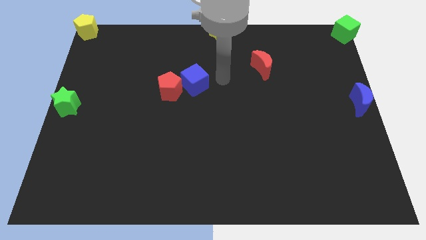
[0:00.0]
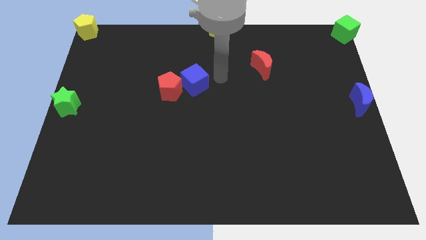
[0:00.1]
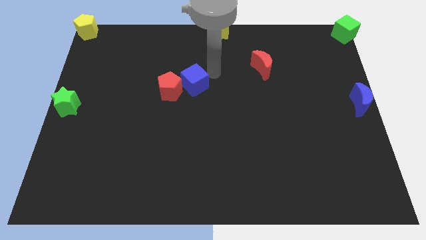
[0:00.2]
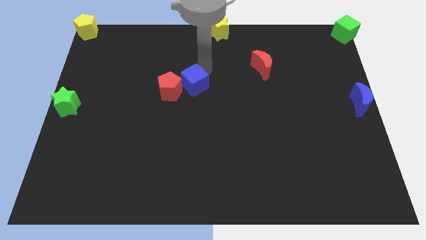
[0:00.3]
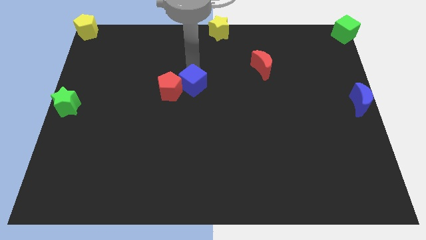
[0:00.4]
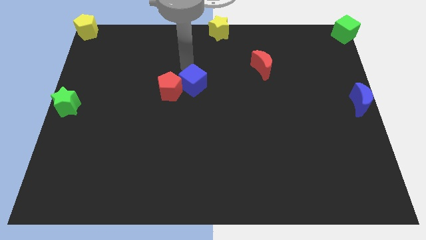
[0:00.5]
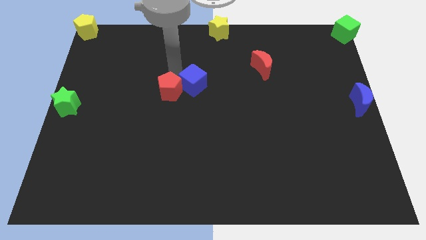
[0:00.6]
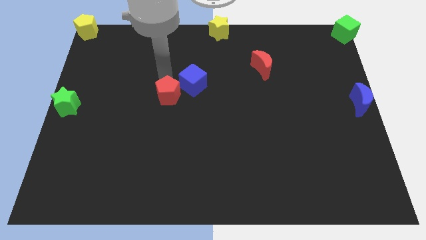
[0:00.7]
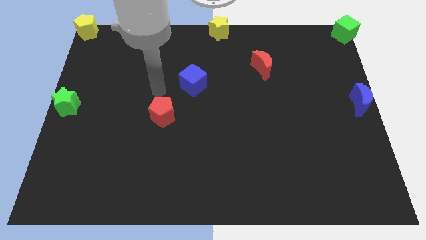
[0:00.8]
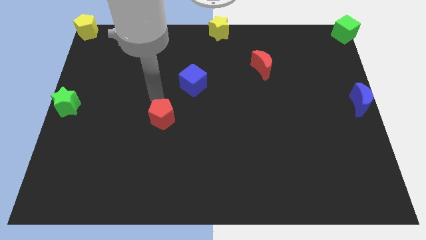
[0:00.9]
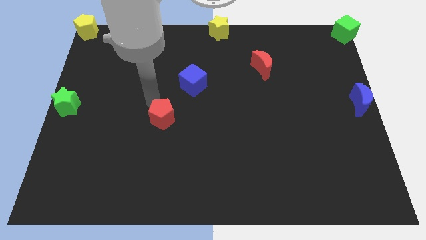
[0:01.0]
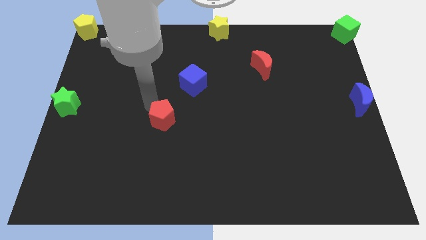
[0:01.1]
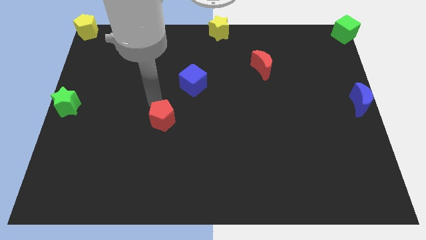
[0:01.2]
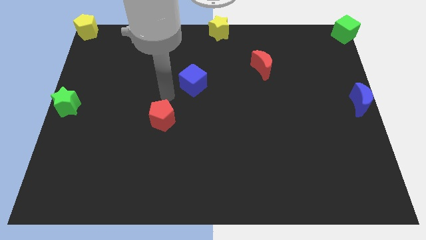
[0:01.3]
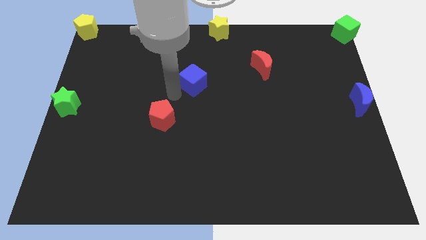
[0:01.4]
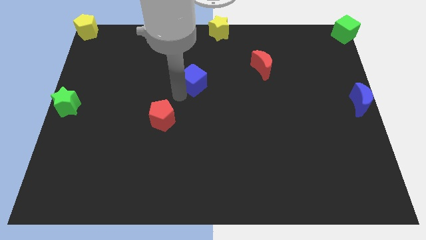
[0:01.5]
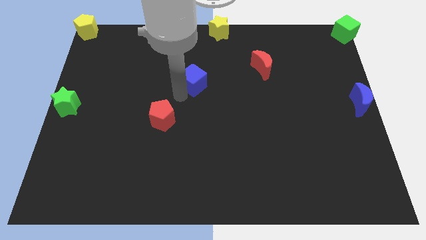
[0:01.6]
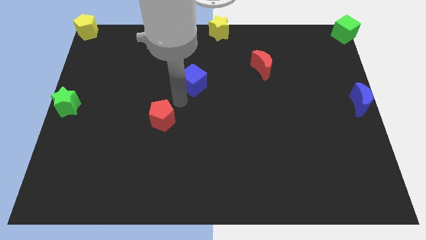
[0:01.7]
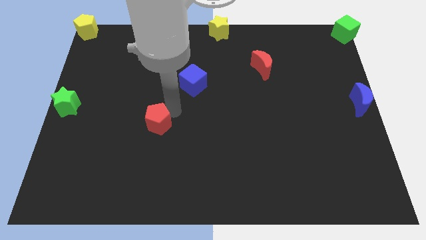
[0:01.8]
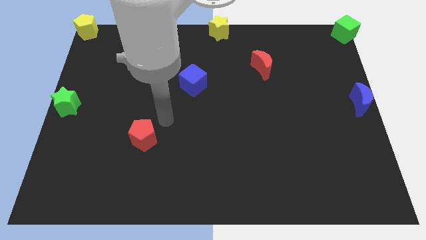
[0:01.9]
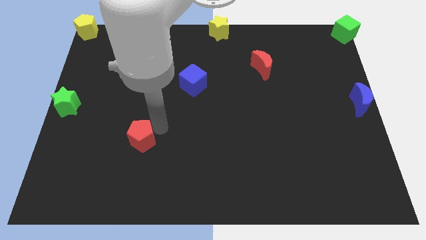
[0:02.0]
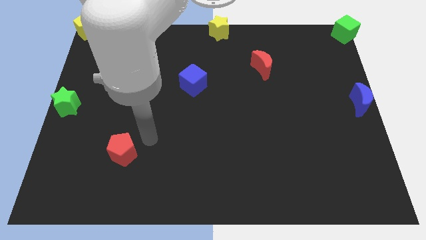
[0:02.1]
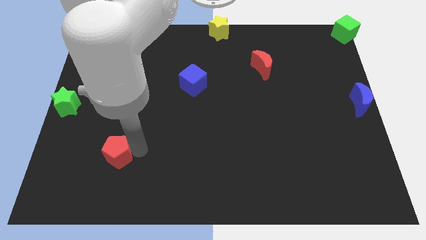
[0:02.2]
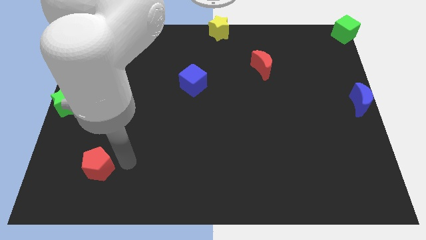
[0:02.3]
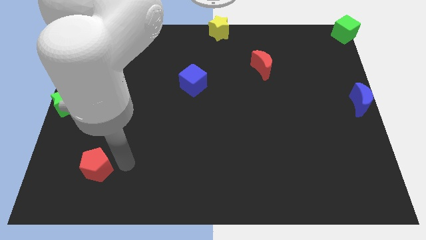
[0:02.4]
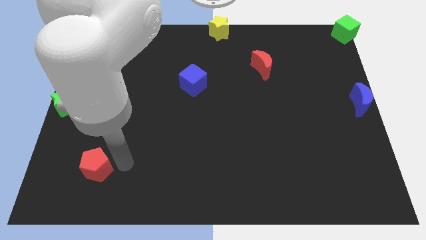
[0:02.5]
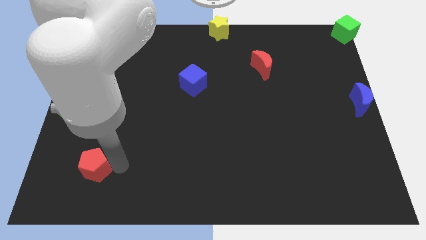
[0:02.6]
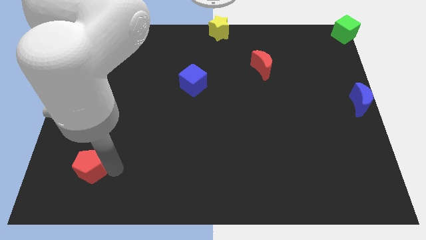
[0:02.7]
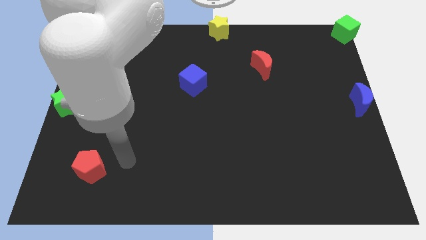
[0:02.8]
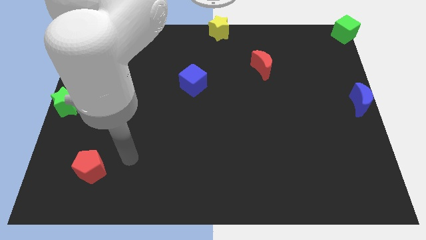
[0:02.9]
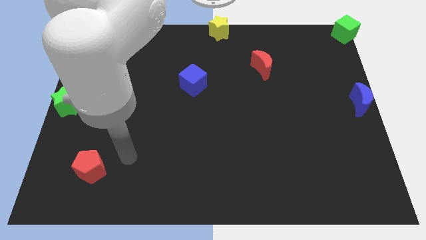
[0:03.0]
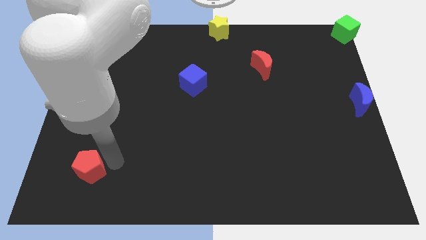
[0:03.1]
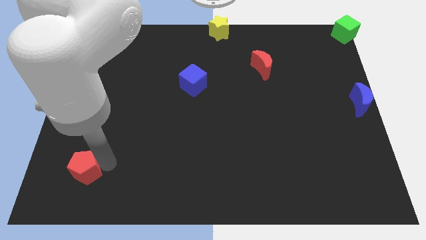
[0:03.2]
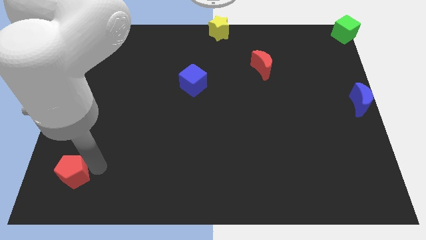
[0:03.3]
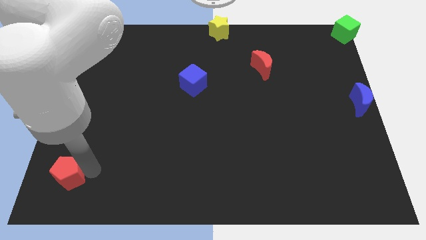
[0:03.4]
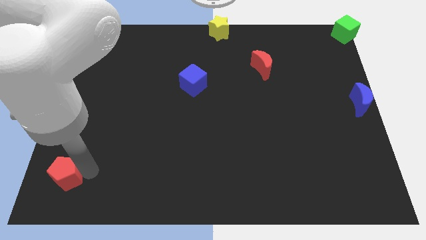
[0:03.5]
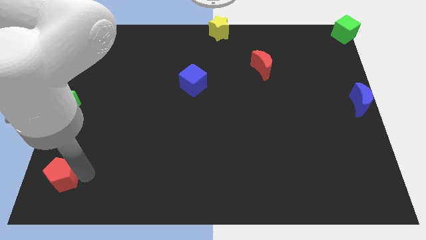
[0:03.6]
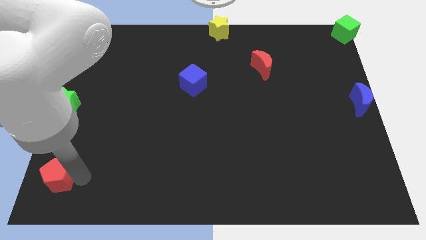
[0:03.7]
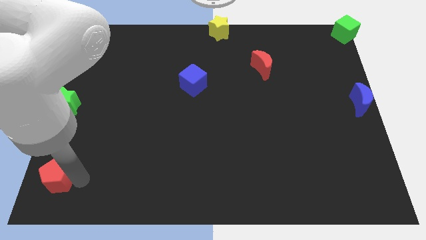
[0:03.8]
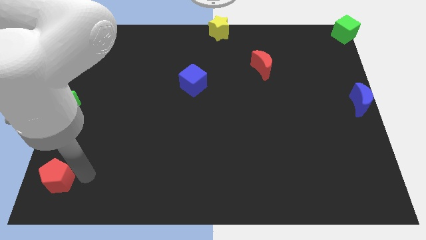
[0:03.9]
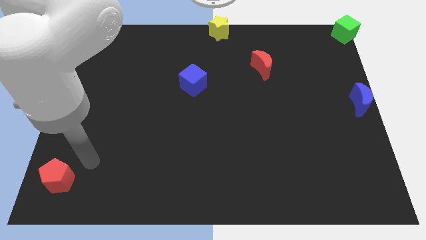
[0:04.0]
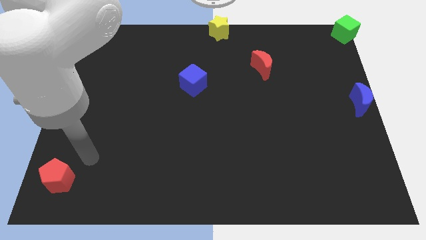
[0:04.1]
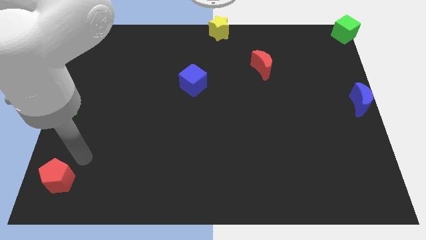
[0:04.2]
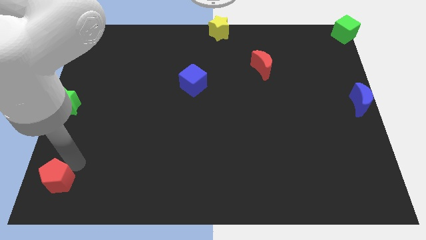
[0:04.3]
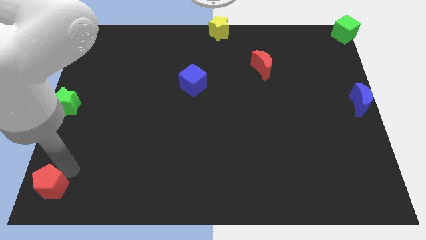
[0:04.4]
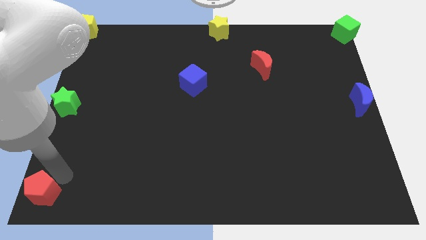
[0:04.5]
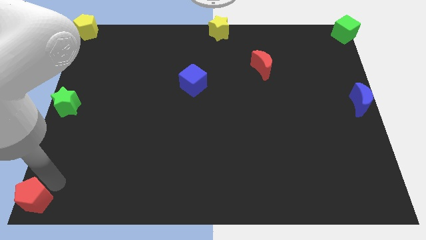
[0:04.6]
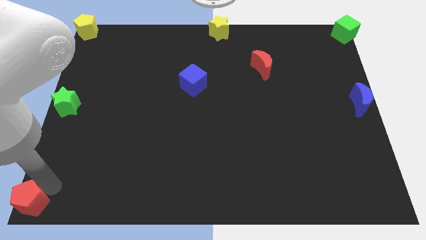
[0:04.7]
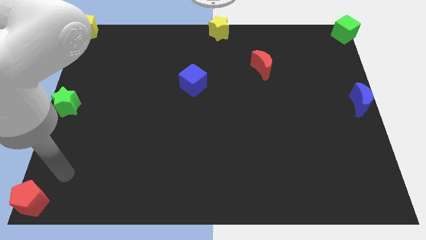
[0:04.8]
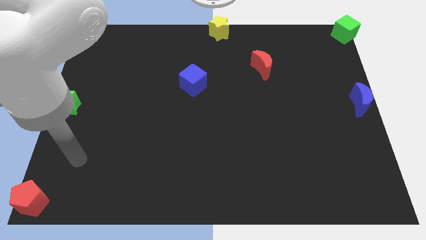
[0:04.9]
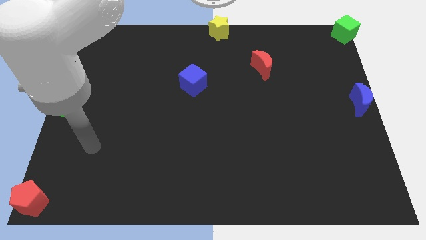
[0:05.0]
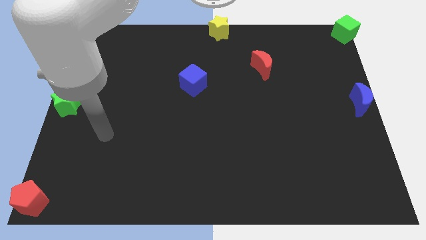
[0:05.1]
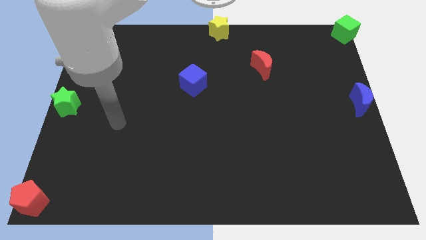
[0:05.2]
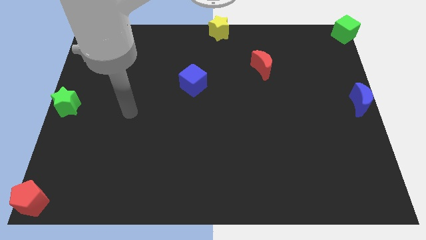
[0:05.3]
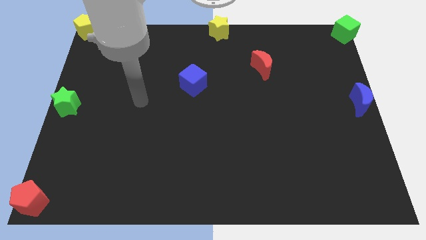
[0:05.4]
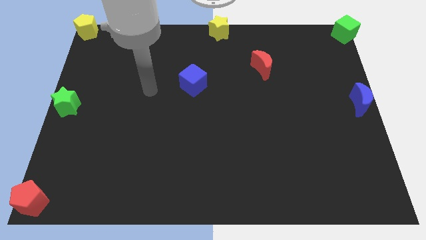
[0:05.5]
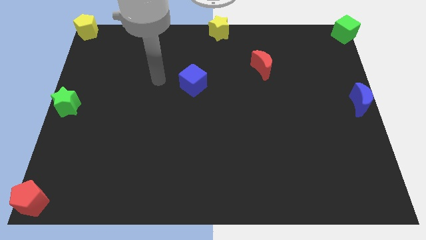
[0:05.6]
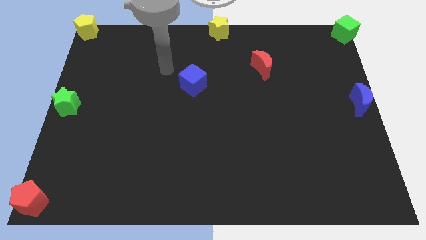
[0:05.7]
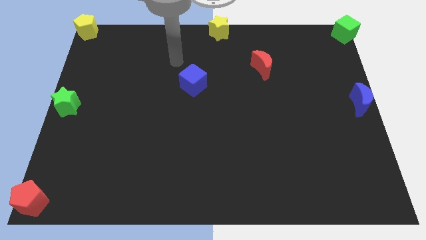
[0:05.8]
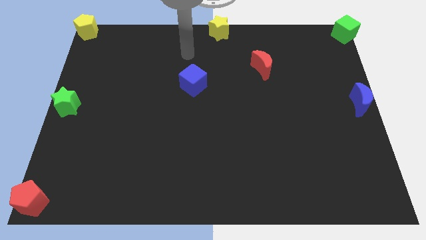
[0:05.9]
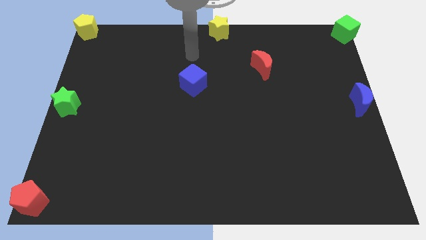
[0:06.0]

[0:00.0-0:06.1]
place the red pentagon at the bottom left corner of the board

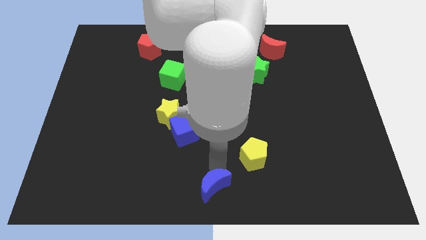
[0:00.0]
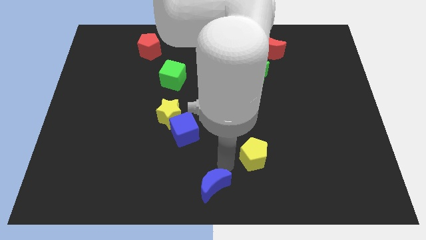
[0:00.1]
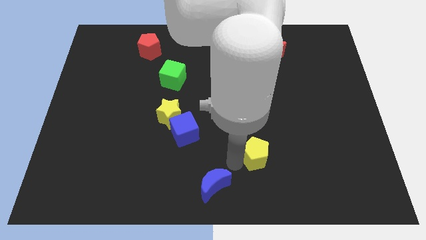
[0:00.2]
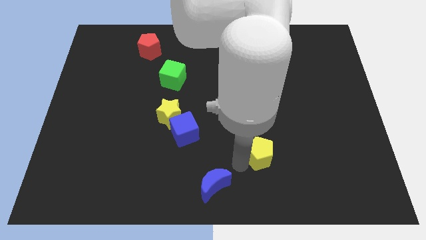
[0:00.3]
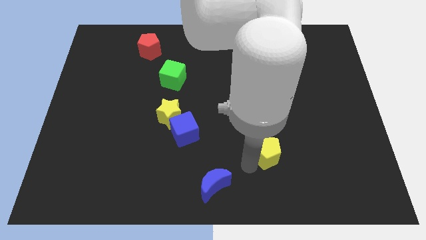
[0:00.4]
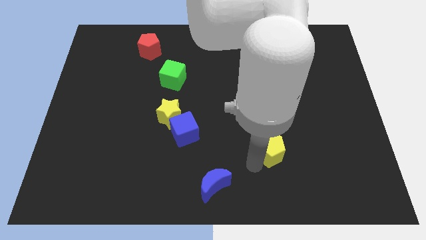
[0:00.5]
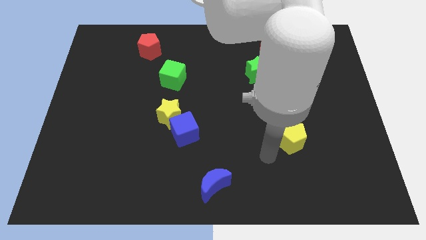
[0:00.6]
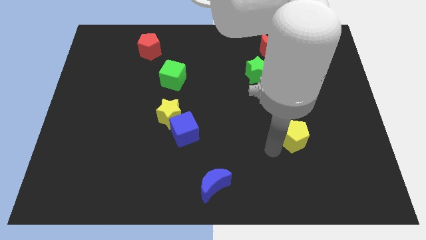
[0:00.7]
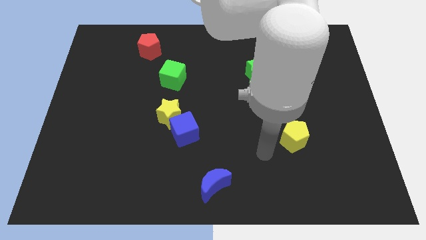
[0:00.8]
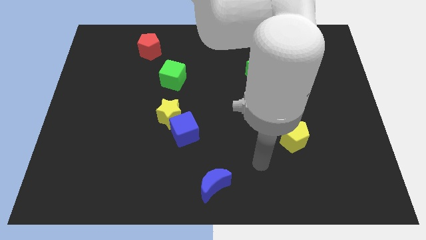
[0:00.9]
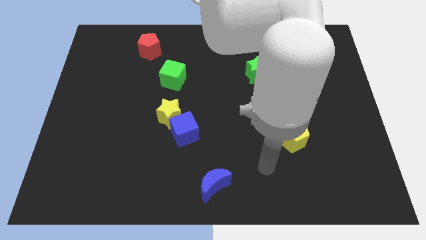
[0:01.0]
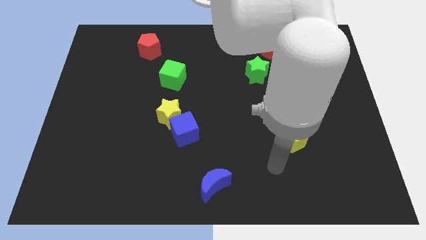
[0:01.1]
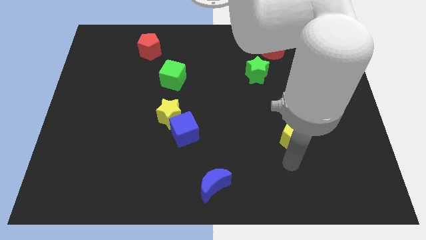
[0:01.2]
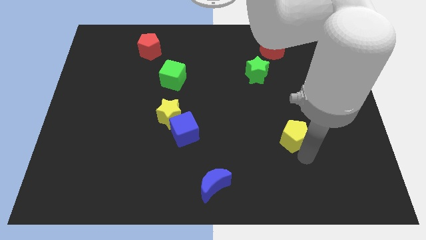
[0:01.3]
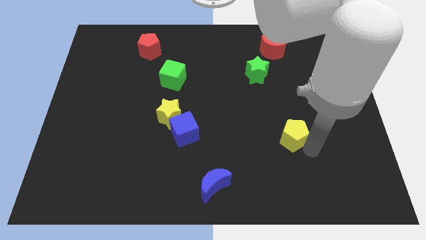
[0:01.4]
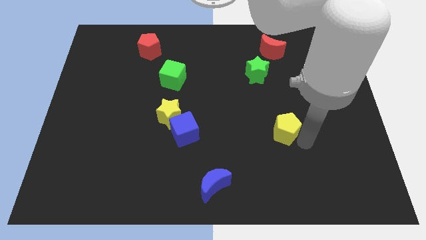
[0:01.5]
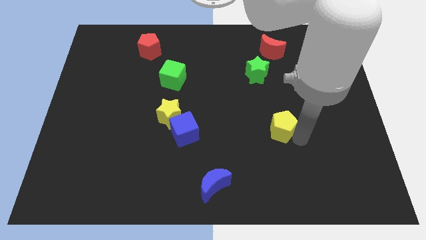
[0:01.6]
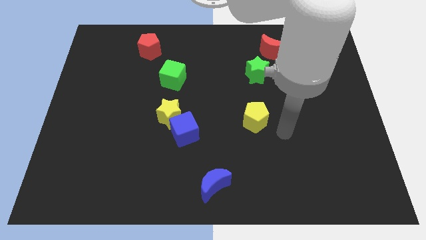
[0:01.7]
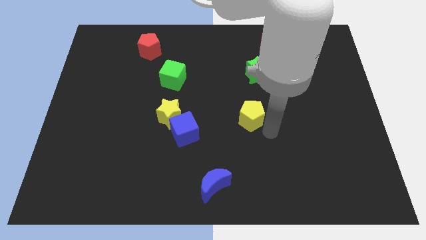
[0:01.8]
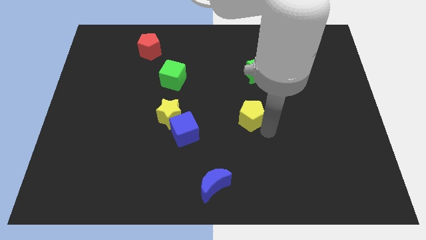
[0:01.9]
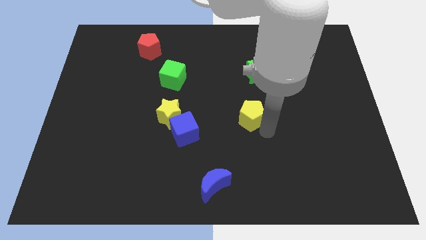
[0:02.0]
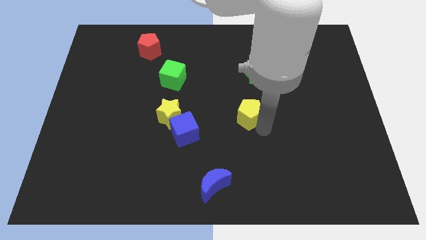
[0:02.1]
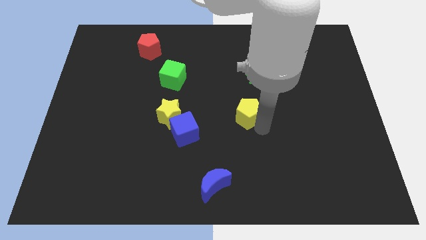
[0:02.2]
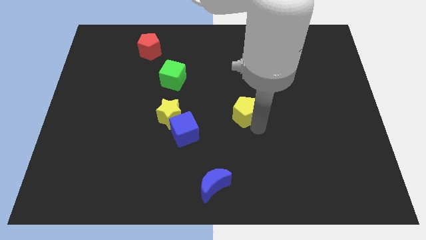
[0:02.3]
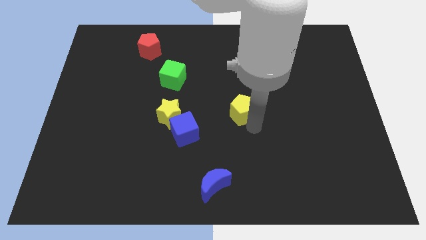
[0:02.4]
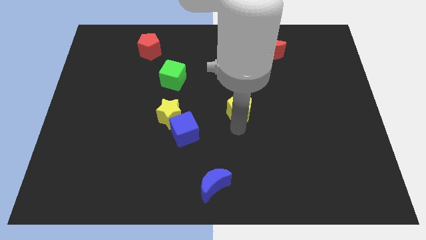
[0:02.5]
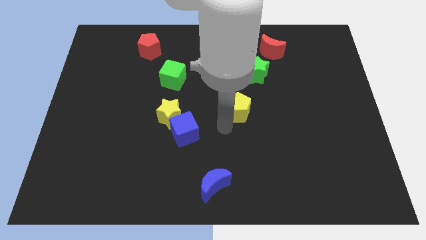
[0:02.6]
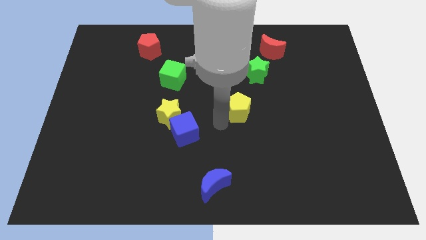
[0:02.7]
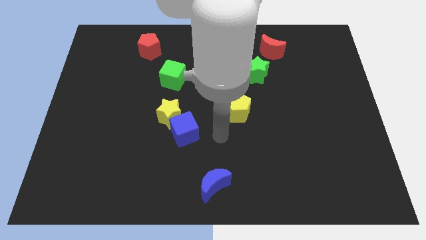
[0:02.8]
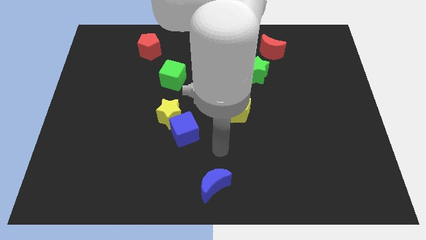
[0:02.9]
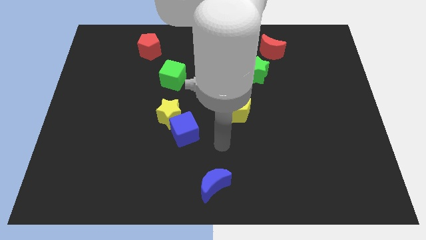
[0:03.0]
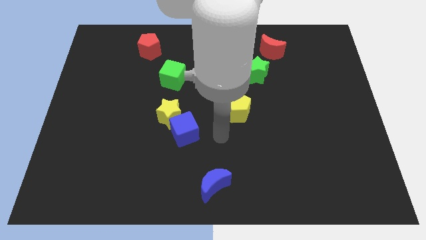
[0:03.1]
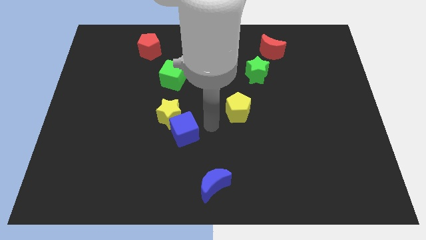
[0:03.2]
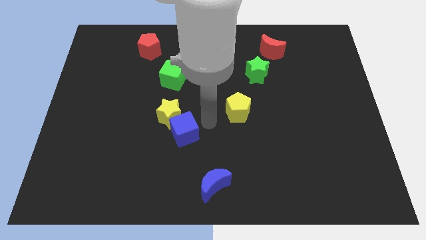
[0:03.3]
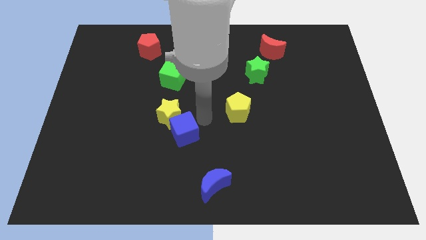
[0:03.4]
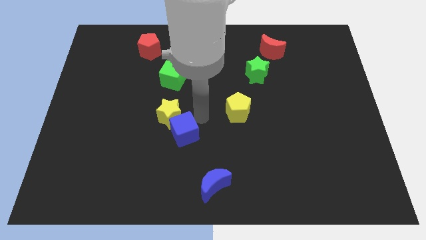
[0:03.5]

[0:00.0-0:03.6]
place yellow pentagon to the center of the board
